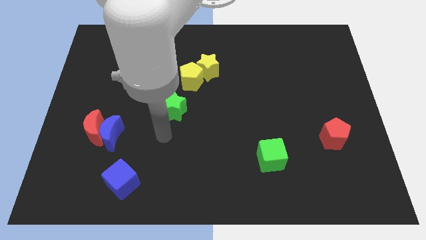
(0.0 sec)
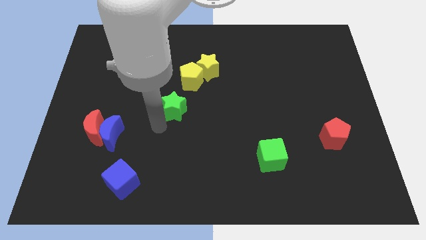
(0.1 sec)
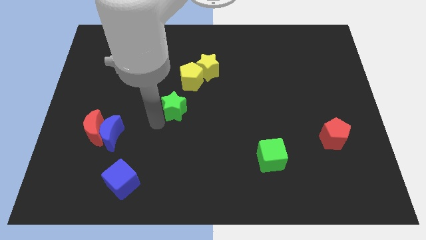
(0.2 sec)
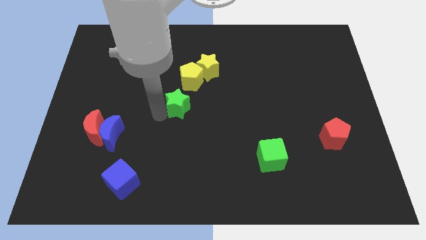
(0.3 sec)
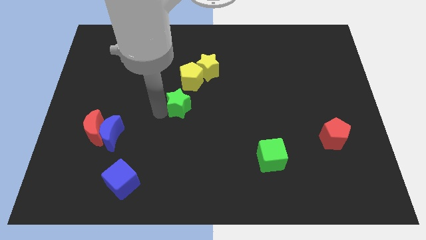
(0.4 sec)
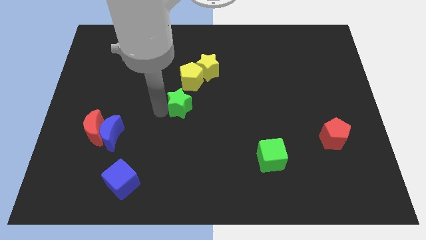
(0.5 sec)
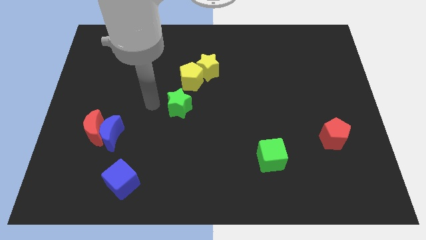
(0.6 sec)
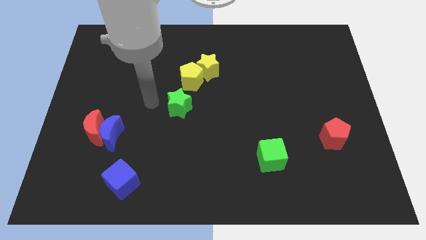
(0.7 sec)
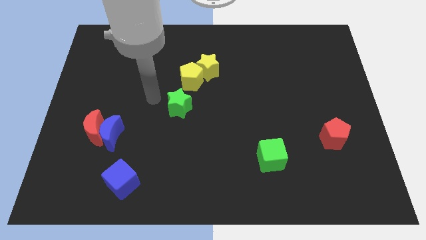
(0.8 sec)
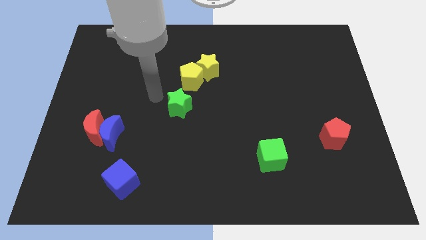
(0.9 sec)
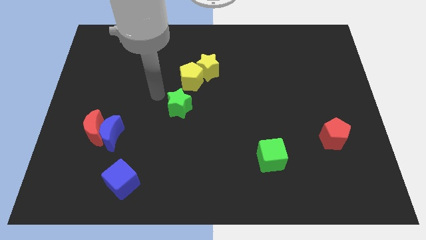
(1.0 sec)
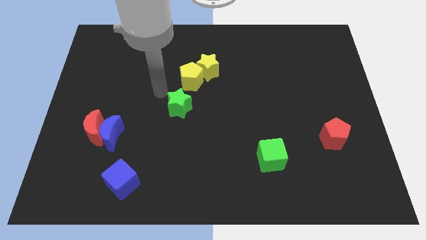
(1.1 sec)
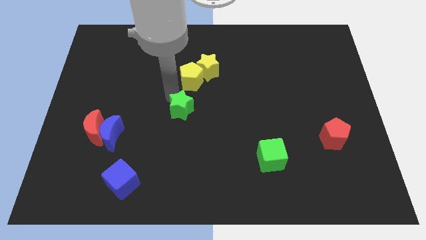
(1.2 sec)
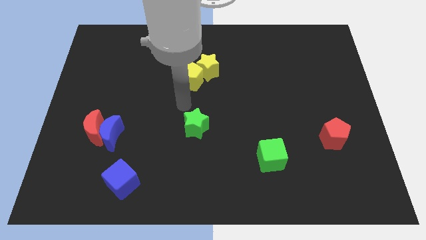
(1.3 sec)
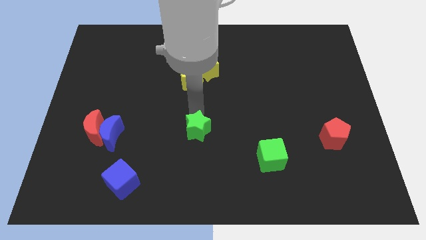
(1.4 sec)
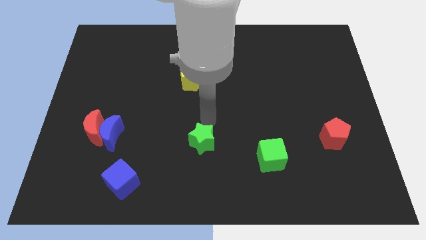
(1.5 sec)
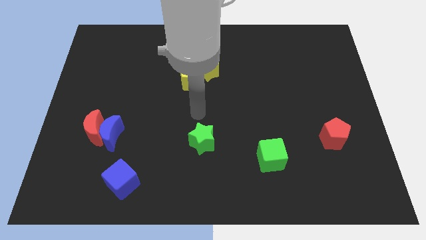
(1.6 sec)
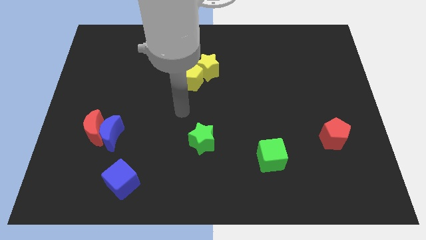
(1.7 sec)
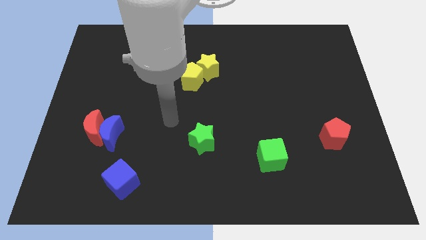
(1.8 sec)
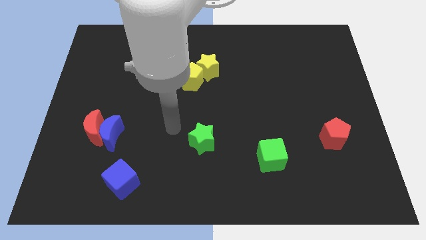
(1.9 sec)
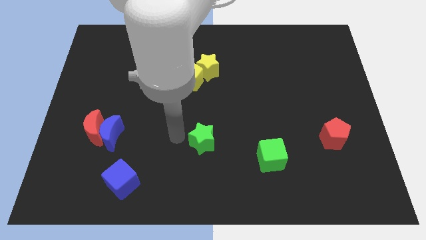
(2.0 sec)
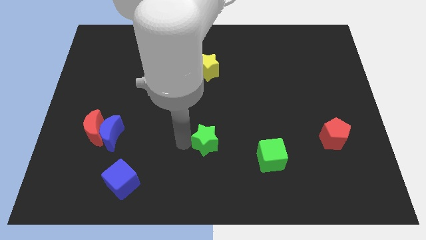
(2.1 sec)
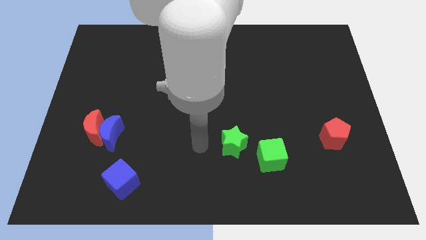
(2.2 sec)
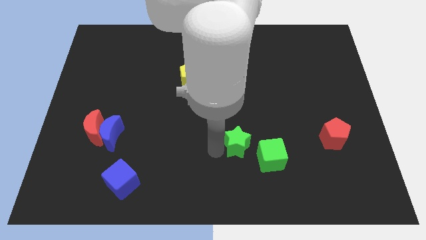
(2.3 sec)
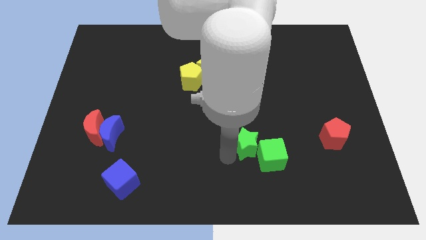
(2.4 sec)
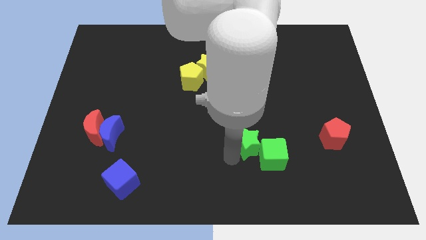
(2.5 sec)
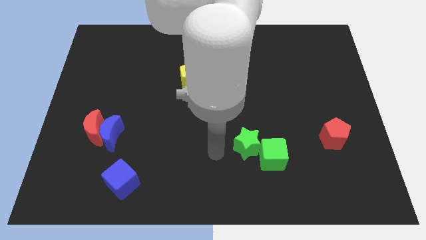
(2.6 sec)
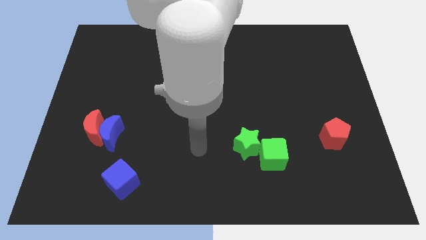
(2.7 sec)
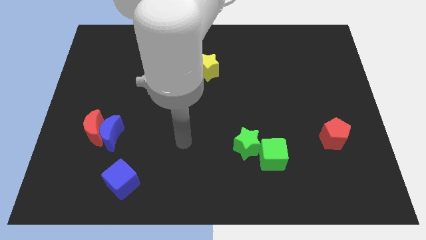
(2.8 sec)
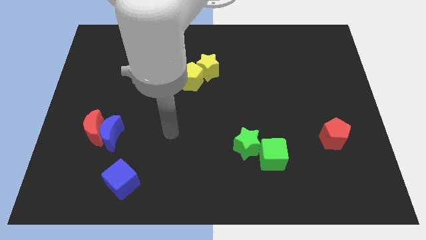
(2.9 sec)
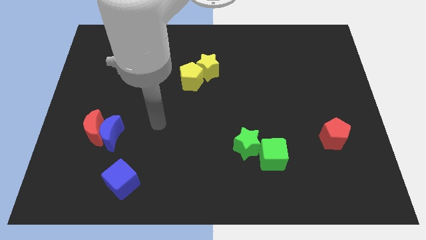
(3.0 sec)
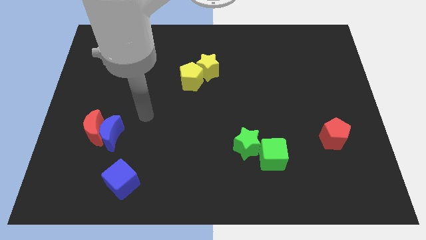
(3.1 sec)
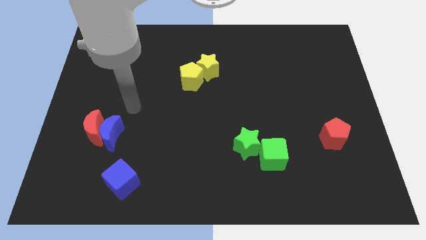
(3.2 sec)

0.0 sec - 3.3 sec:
slide the green star diagonally bottom right to the yellow pentagon

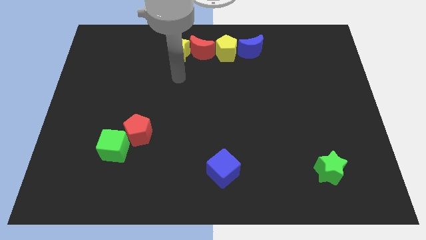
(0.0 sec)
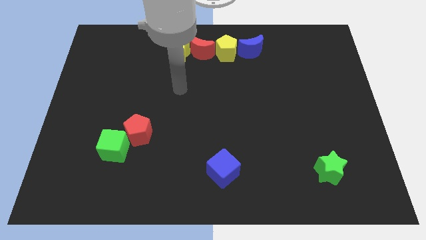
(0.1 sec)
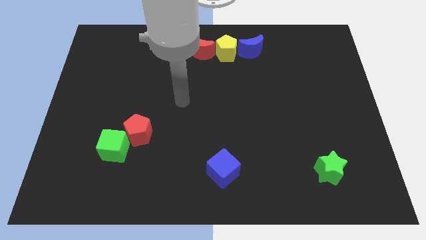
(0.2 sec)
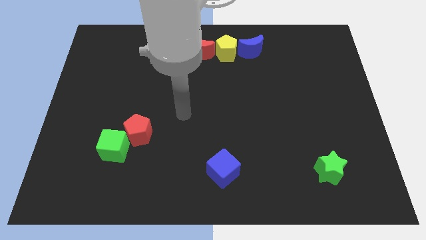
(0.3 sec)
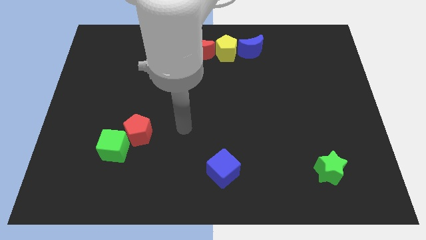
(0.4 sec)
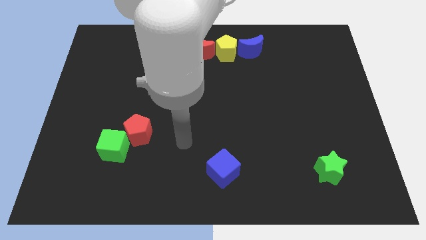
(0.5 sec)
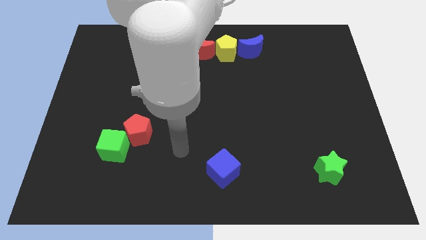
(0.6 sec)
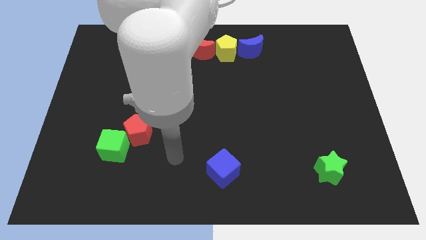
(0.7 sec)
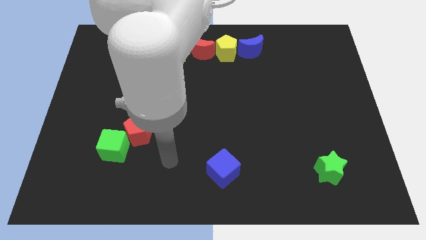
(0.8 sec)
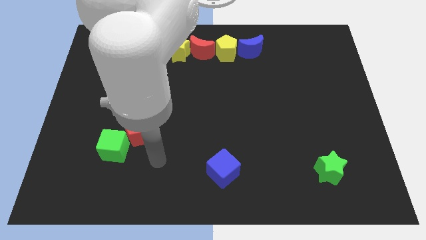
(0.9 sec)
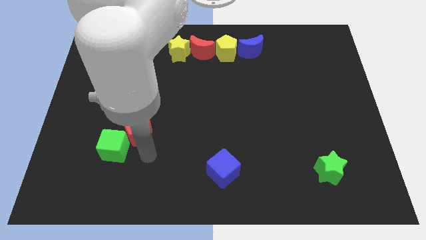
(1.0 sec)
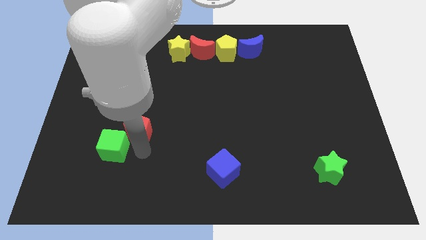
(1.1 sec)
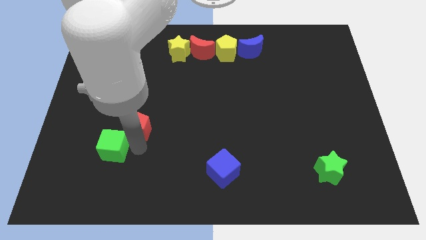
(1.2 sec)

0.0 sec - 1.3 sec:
touch the red pentagon on bottom

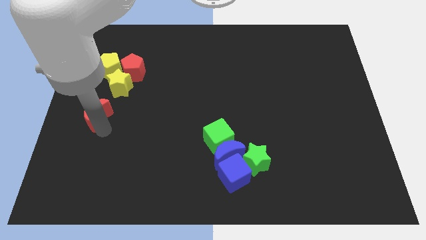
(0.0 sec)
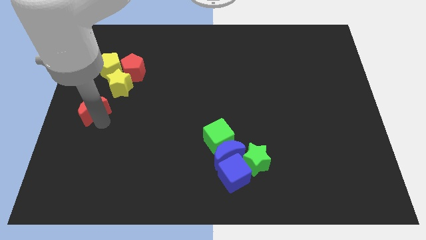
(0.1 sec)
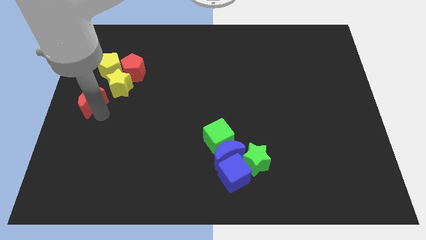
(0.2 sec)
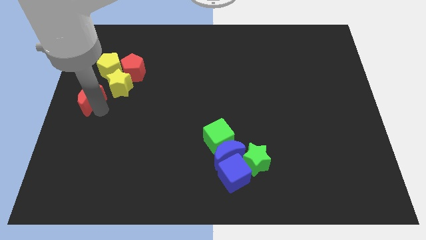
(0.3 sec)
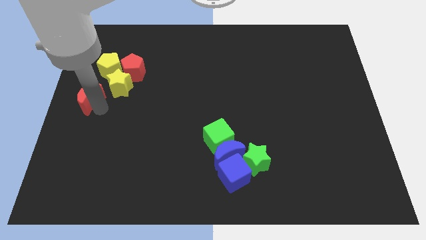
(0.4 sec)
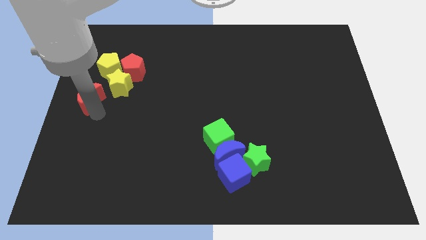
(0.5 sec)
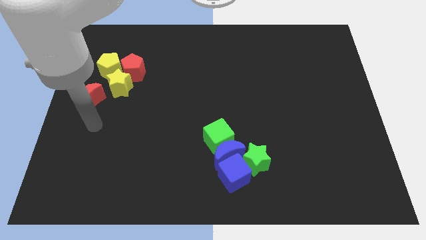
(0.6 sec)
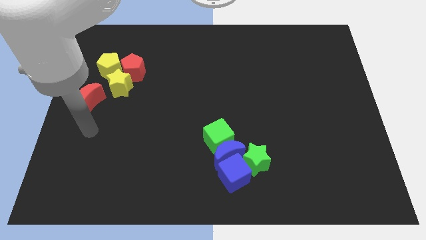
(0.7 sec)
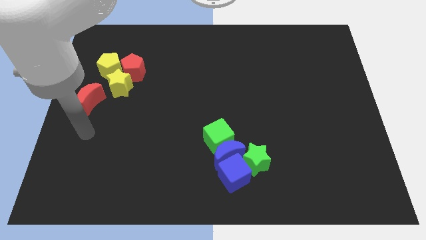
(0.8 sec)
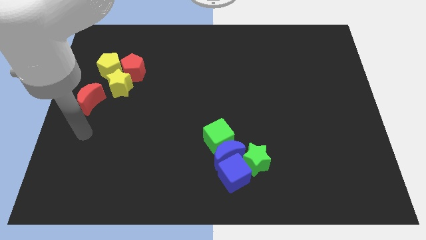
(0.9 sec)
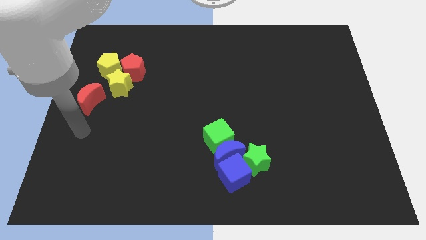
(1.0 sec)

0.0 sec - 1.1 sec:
slide the red moon to the left of the yellow star

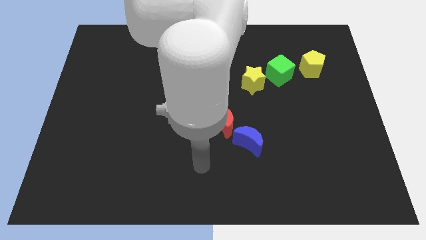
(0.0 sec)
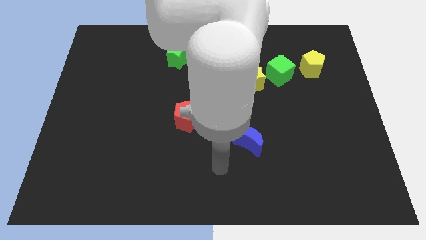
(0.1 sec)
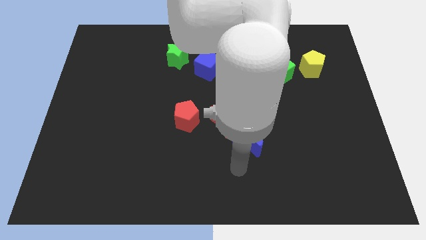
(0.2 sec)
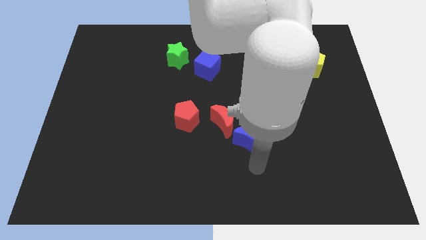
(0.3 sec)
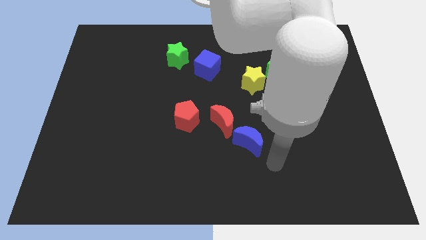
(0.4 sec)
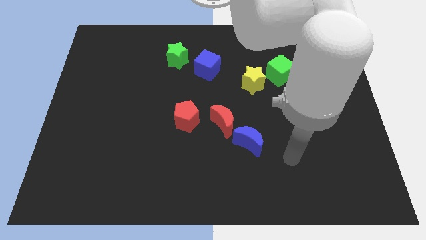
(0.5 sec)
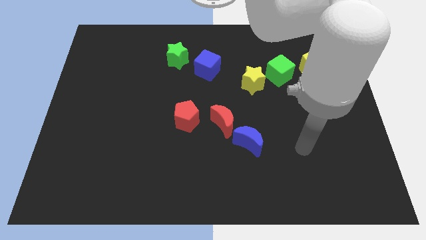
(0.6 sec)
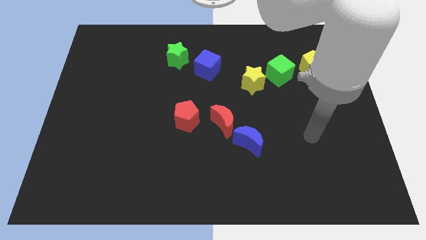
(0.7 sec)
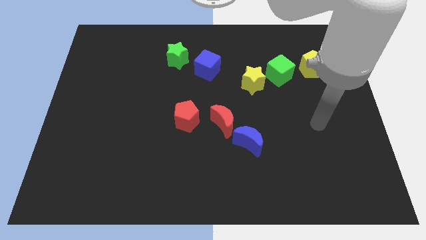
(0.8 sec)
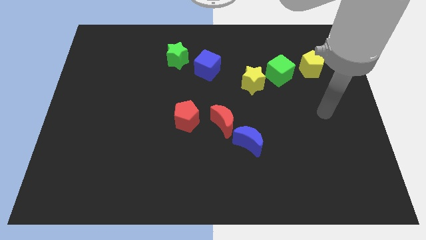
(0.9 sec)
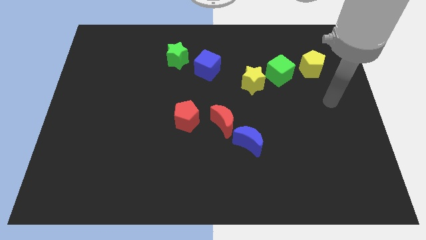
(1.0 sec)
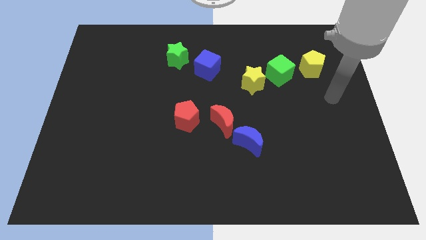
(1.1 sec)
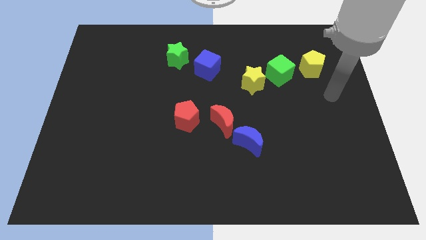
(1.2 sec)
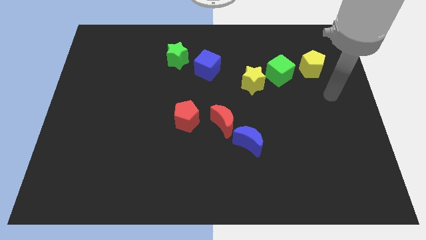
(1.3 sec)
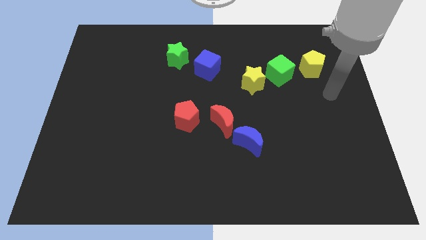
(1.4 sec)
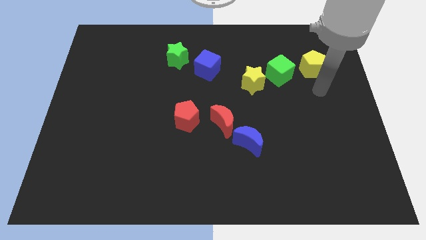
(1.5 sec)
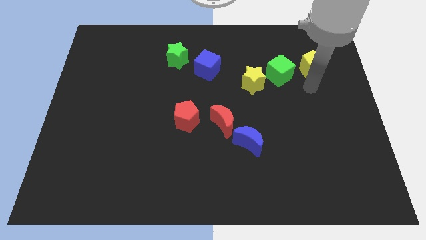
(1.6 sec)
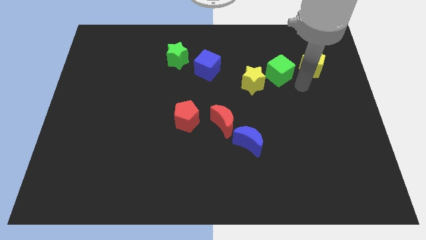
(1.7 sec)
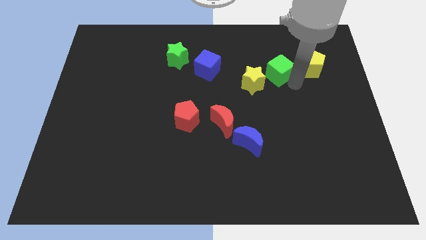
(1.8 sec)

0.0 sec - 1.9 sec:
place your arm to the bottom left of the yellow pentagon

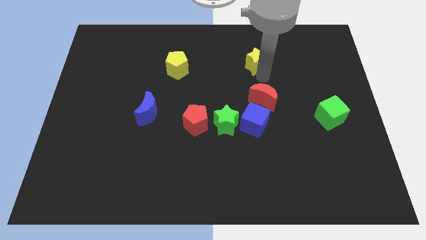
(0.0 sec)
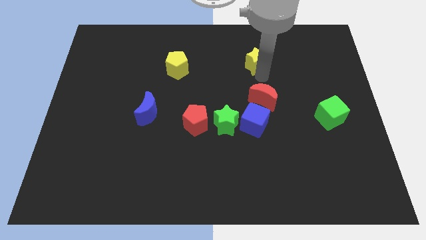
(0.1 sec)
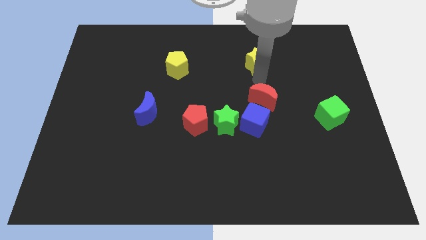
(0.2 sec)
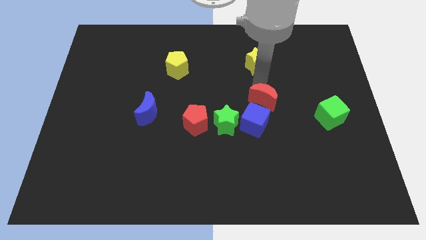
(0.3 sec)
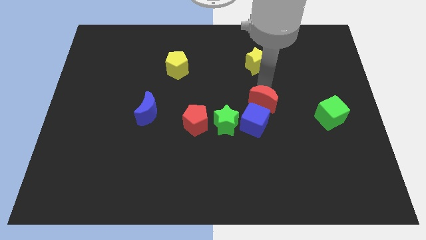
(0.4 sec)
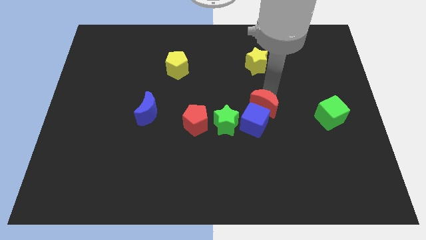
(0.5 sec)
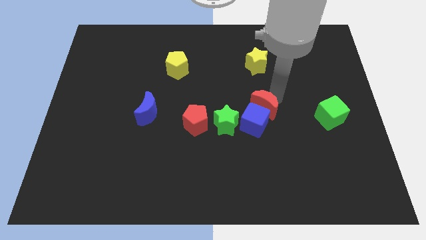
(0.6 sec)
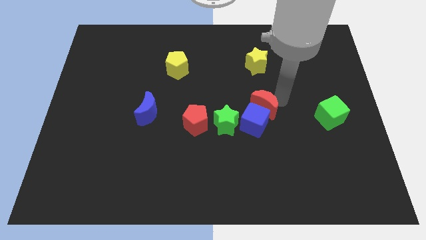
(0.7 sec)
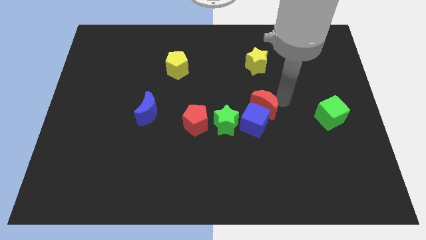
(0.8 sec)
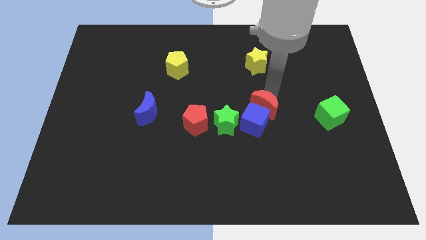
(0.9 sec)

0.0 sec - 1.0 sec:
push the red moon close to the top side of the blue cube

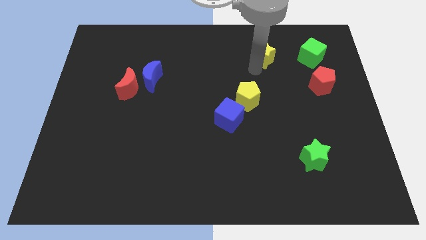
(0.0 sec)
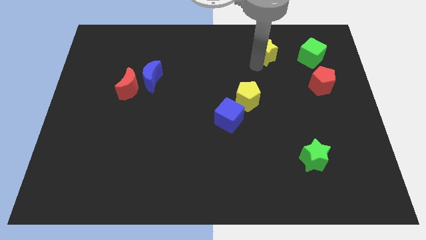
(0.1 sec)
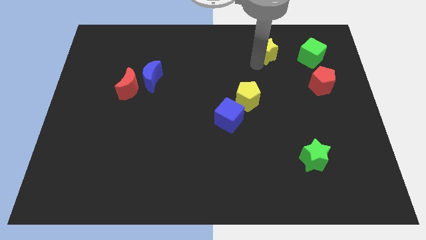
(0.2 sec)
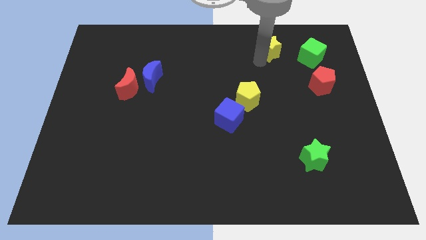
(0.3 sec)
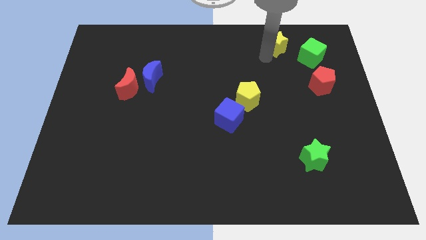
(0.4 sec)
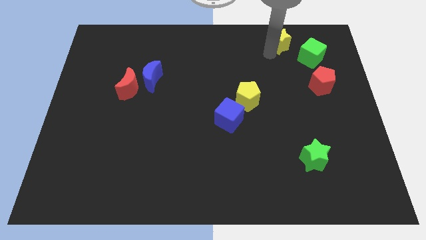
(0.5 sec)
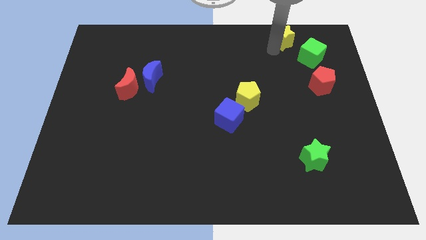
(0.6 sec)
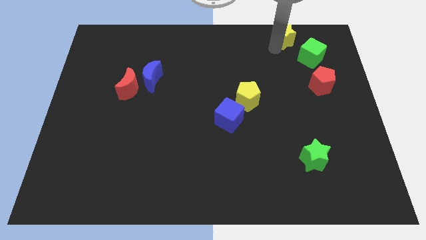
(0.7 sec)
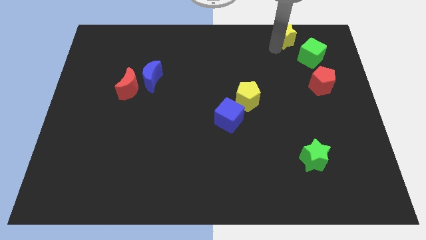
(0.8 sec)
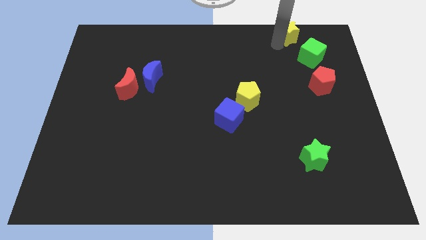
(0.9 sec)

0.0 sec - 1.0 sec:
move the yellow star to the top left of the green cube
